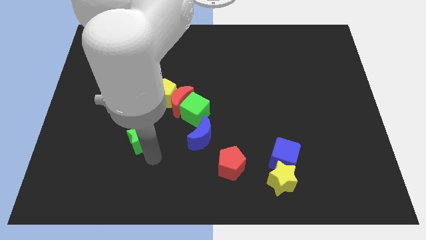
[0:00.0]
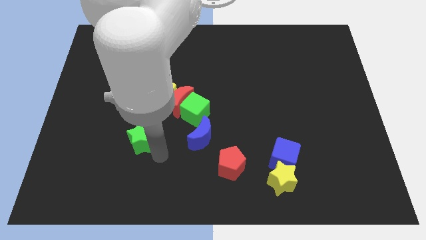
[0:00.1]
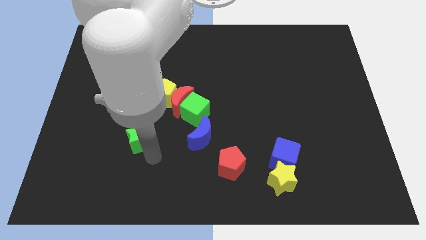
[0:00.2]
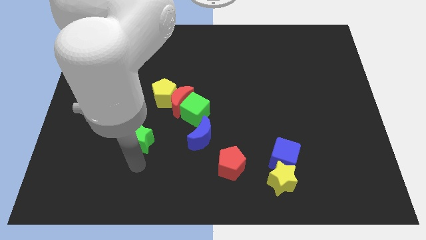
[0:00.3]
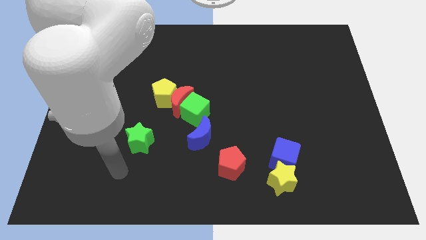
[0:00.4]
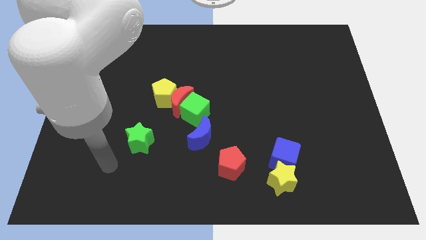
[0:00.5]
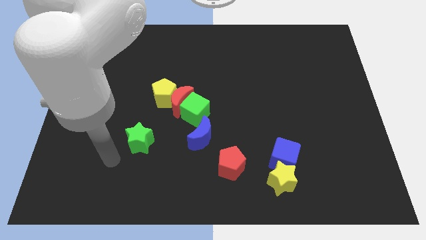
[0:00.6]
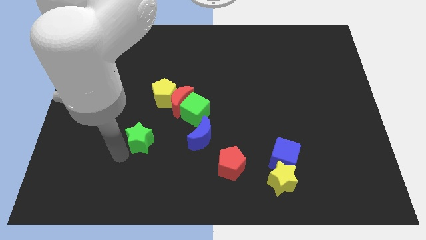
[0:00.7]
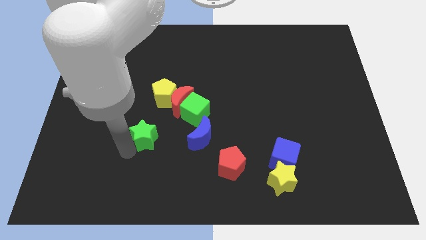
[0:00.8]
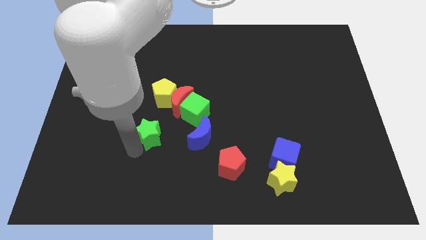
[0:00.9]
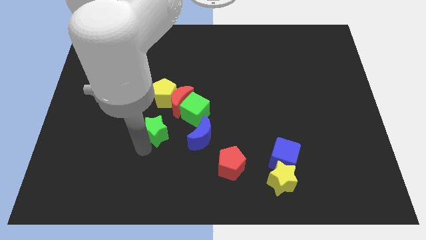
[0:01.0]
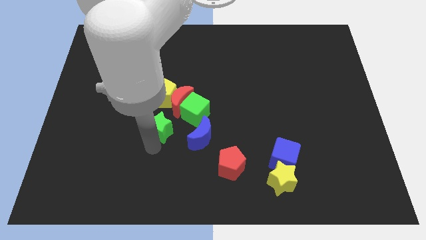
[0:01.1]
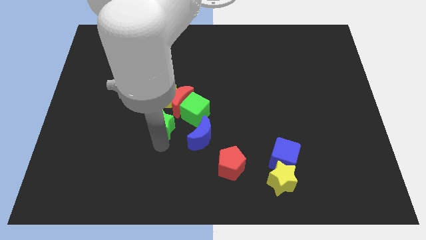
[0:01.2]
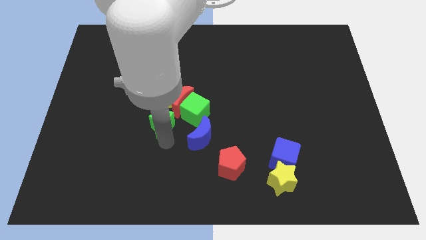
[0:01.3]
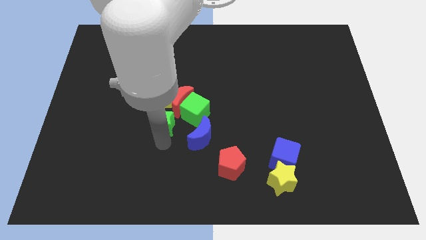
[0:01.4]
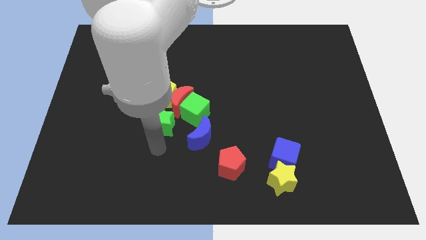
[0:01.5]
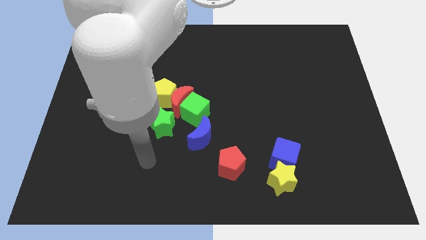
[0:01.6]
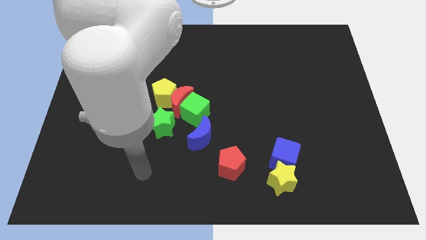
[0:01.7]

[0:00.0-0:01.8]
push the green star slightly towards the red crescent

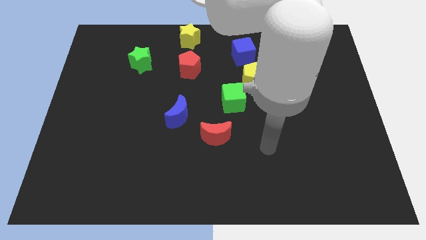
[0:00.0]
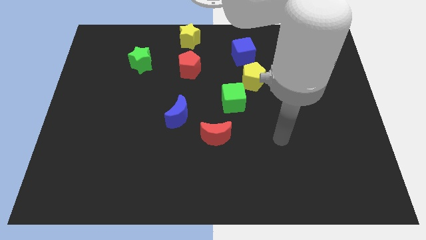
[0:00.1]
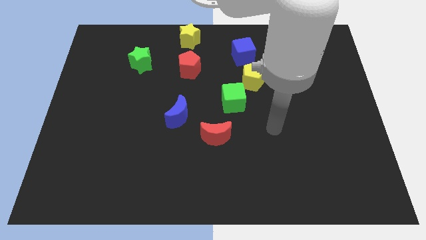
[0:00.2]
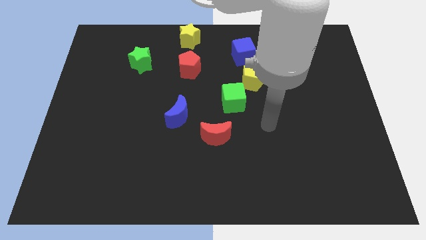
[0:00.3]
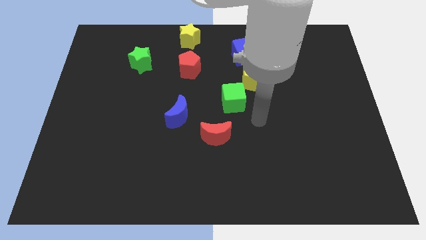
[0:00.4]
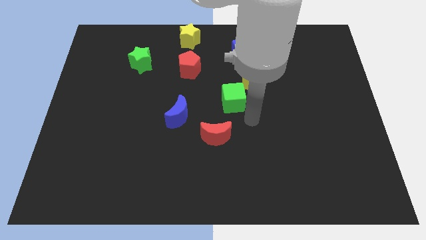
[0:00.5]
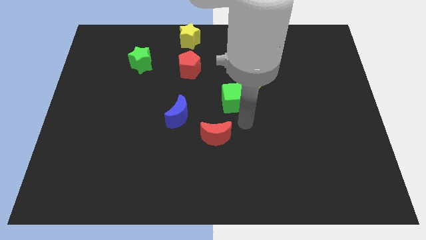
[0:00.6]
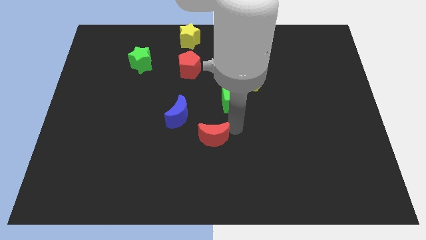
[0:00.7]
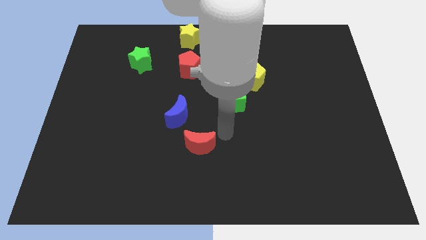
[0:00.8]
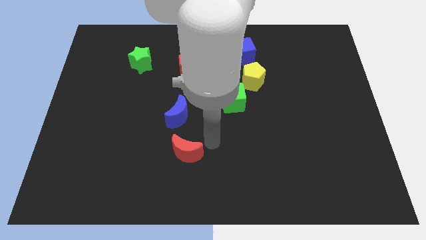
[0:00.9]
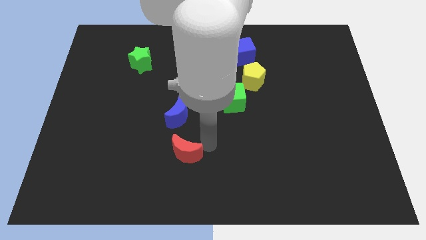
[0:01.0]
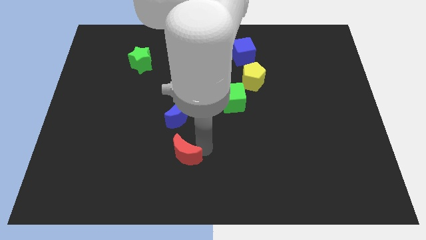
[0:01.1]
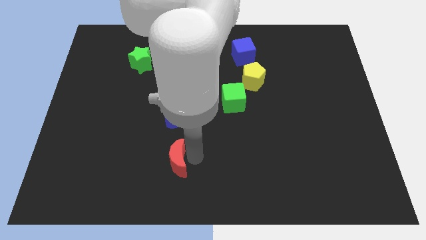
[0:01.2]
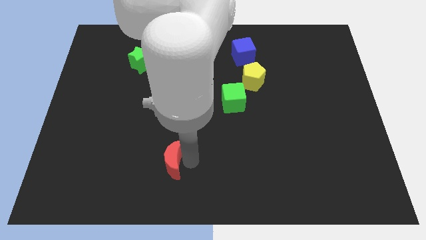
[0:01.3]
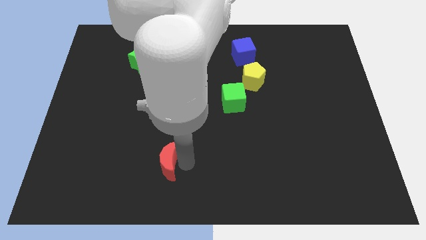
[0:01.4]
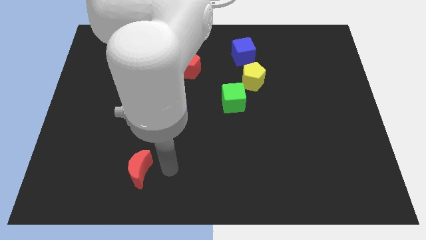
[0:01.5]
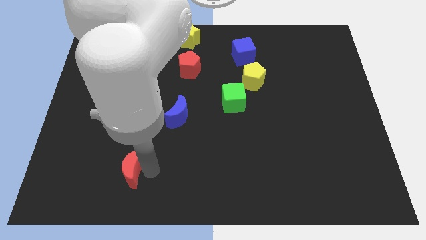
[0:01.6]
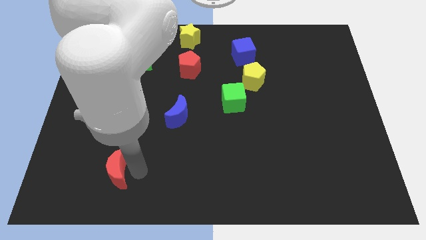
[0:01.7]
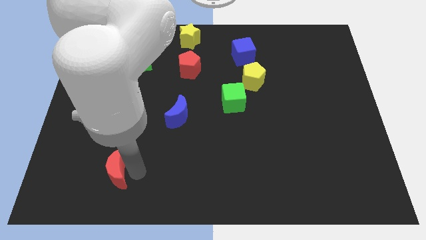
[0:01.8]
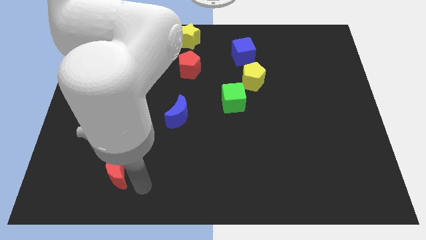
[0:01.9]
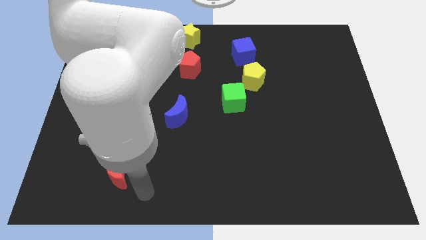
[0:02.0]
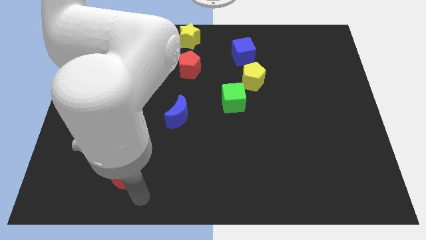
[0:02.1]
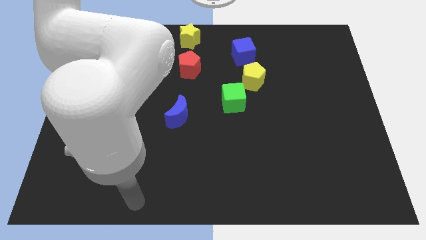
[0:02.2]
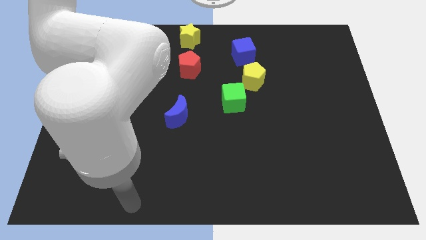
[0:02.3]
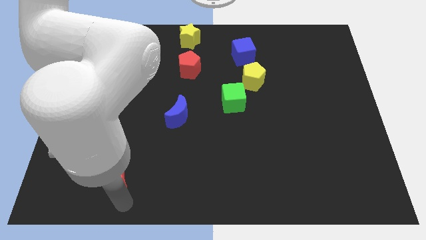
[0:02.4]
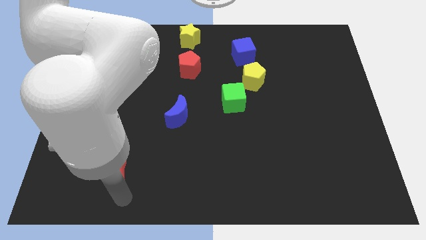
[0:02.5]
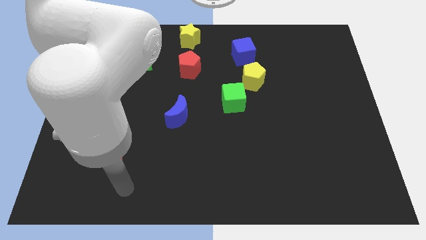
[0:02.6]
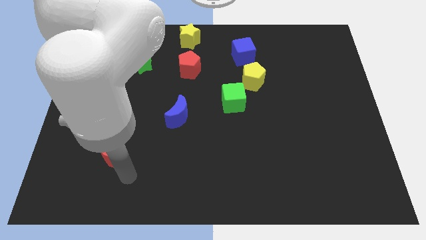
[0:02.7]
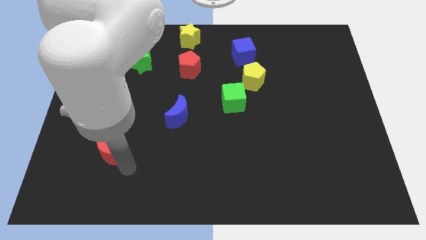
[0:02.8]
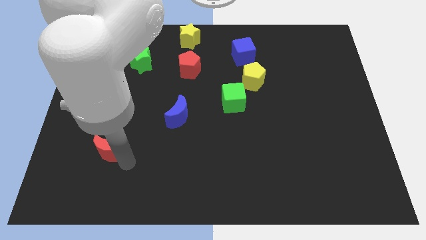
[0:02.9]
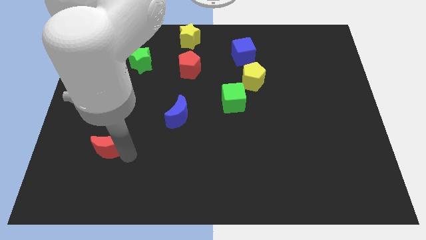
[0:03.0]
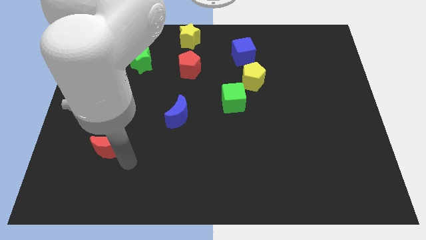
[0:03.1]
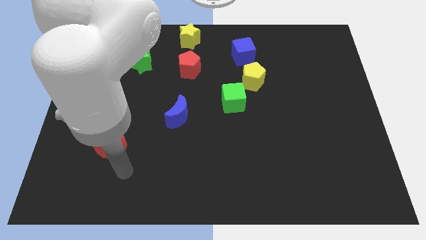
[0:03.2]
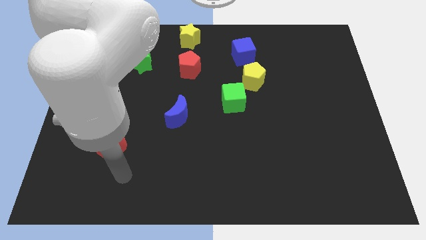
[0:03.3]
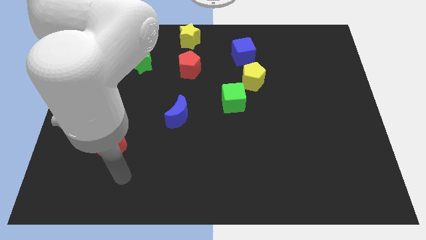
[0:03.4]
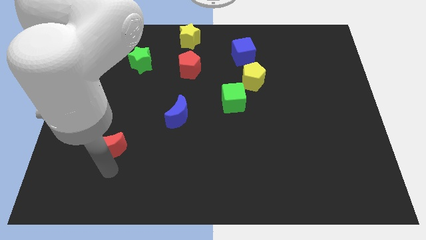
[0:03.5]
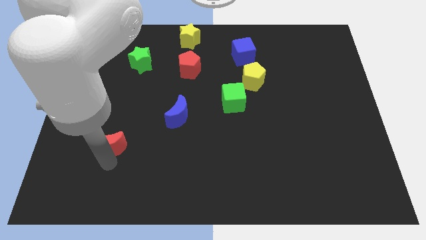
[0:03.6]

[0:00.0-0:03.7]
push the red crescent to the left side of the board

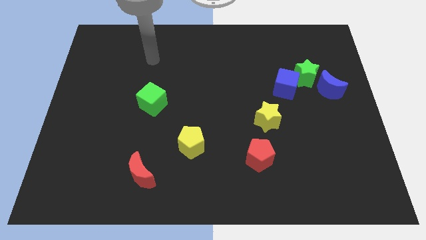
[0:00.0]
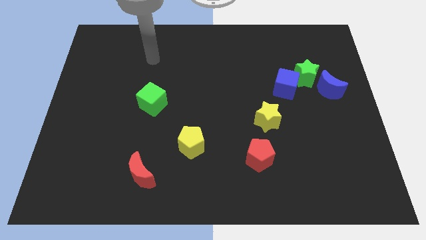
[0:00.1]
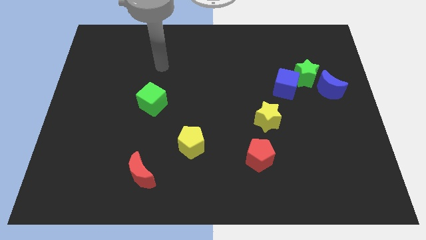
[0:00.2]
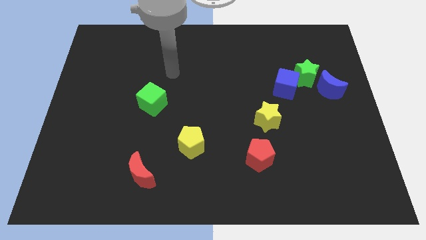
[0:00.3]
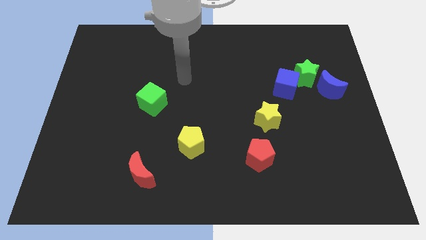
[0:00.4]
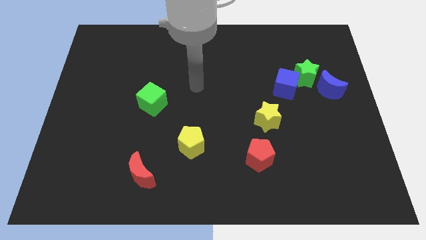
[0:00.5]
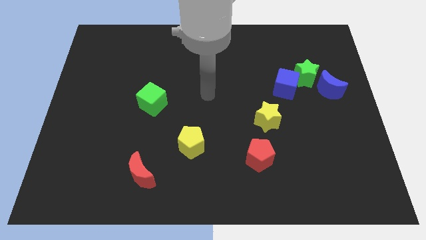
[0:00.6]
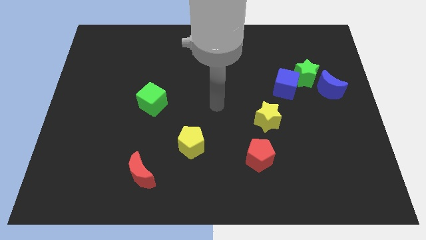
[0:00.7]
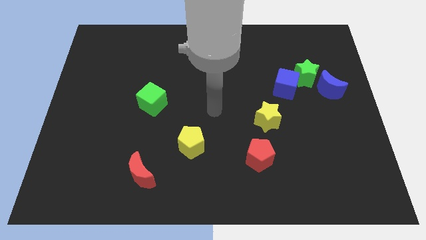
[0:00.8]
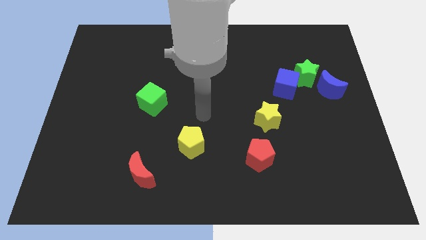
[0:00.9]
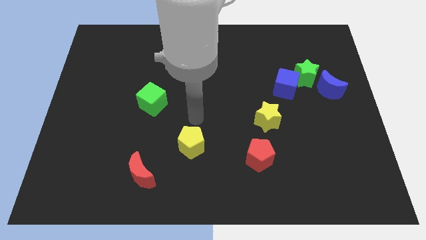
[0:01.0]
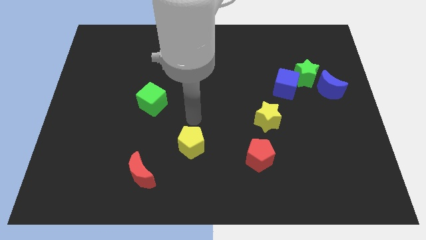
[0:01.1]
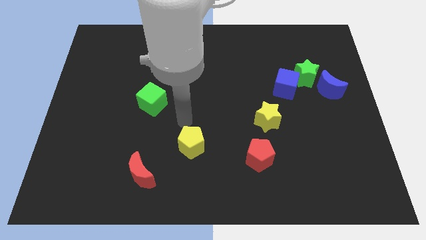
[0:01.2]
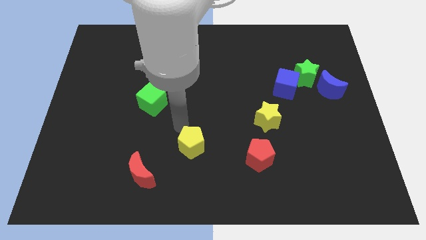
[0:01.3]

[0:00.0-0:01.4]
place your arm above the yellow pentagon

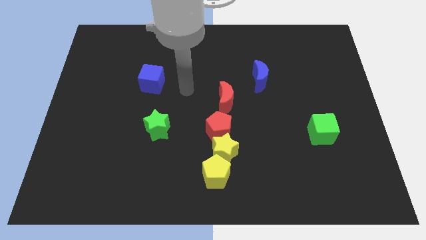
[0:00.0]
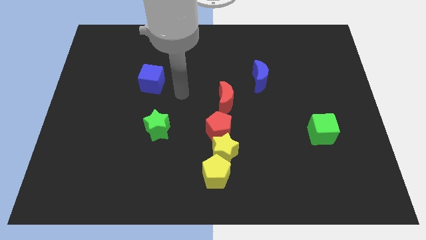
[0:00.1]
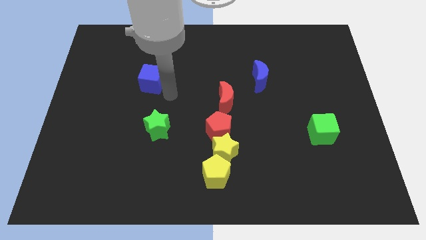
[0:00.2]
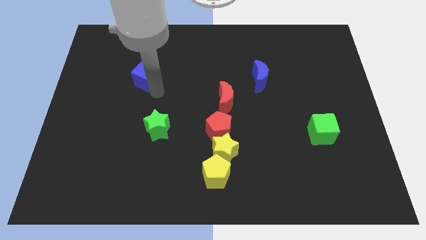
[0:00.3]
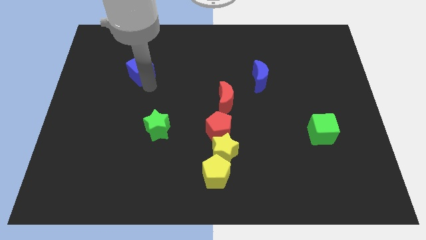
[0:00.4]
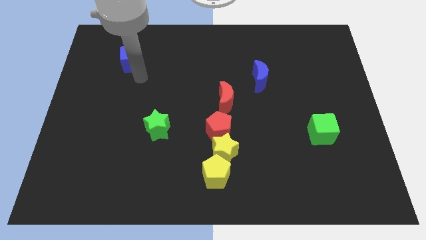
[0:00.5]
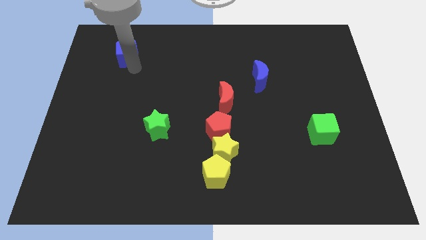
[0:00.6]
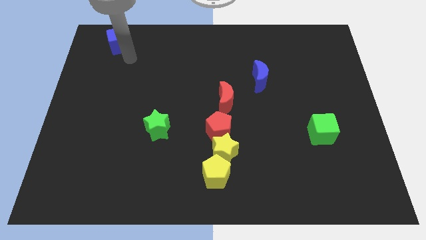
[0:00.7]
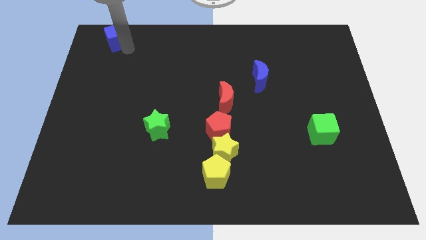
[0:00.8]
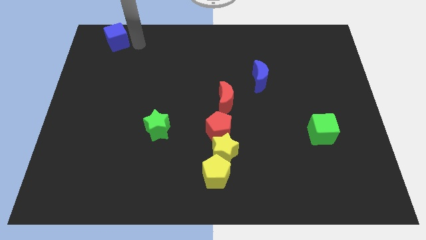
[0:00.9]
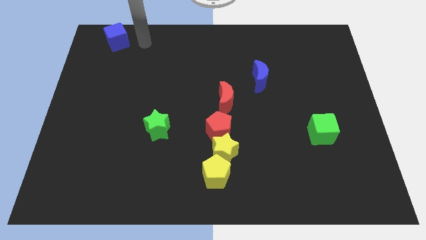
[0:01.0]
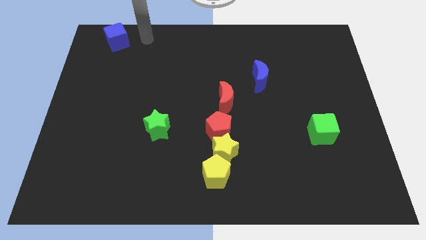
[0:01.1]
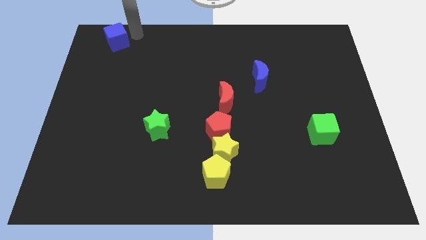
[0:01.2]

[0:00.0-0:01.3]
move the blue cube to the top left

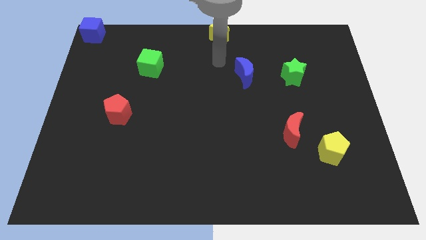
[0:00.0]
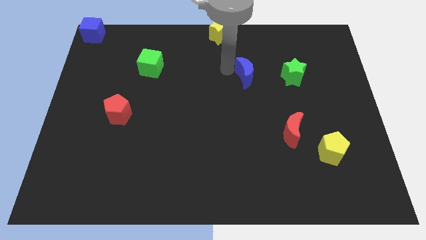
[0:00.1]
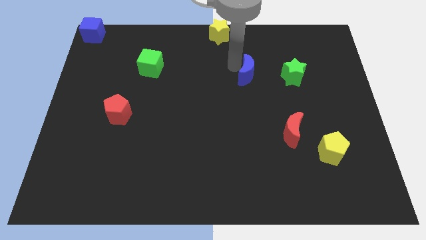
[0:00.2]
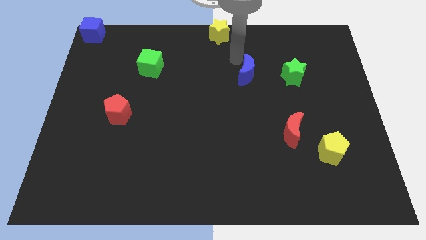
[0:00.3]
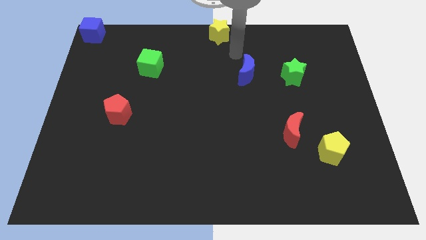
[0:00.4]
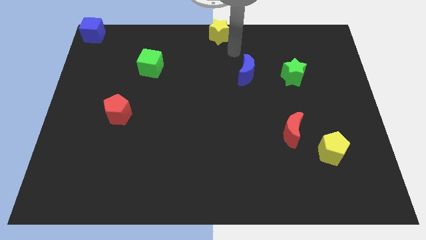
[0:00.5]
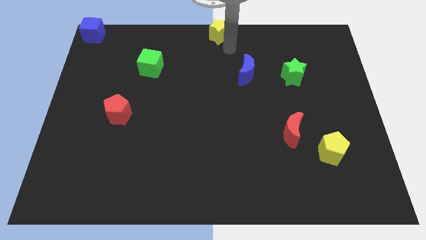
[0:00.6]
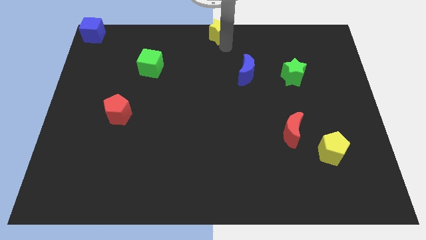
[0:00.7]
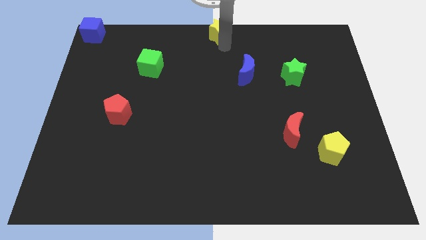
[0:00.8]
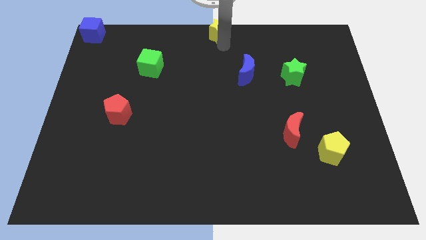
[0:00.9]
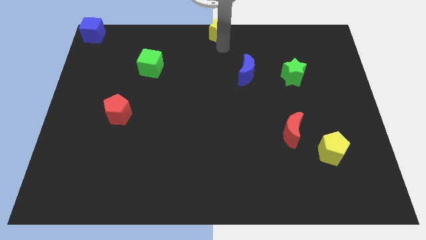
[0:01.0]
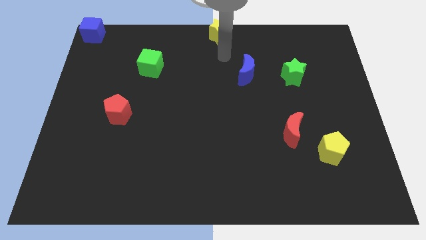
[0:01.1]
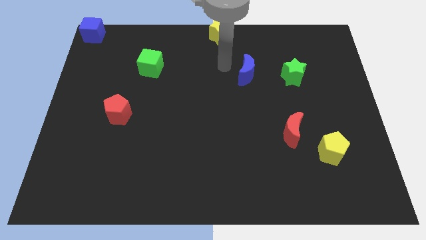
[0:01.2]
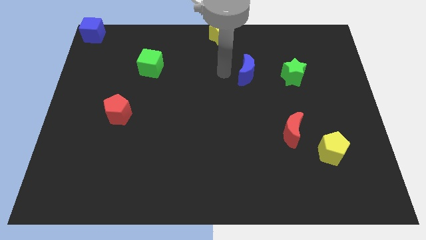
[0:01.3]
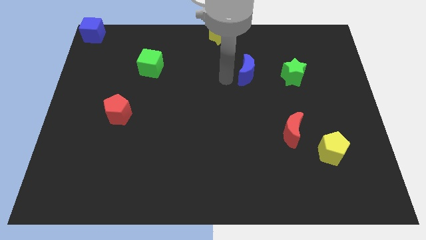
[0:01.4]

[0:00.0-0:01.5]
tap at the top side of the blue crescent
